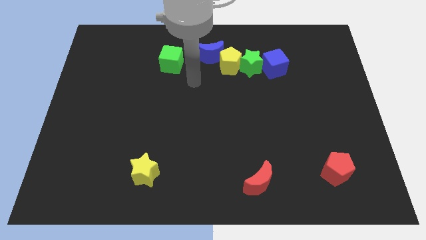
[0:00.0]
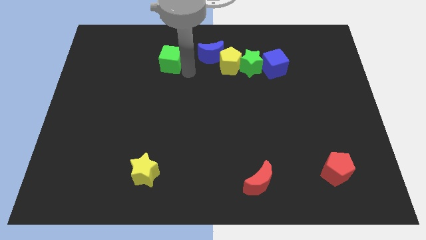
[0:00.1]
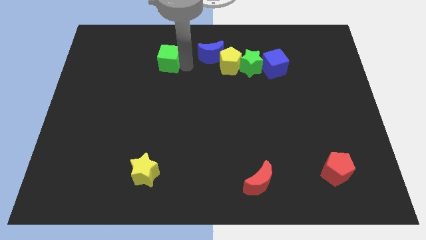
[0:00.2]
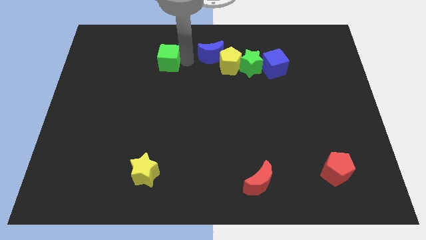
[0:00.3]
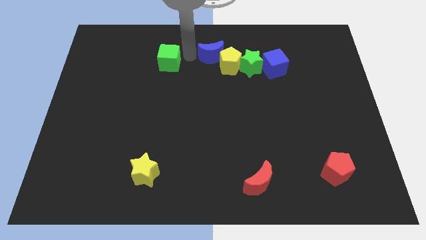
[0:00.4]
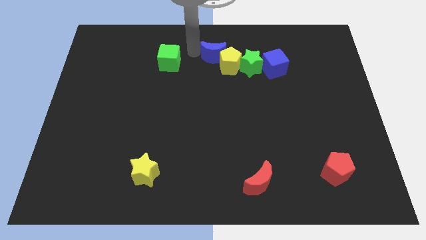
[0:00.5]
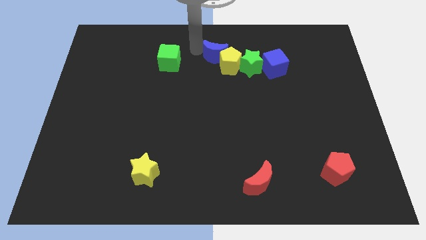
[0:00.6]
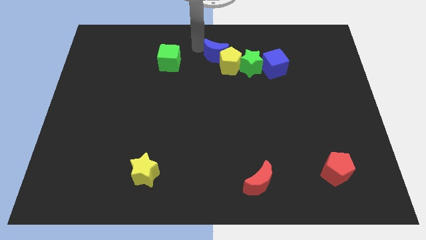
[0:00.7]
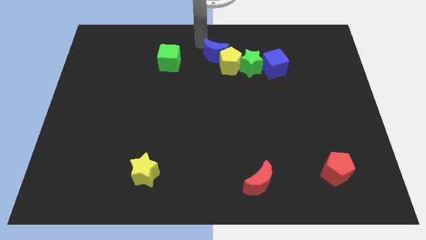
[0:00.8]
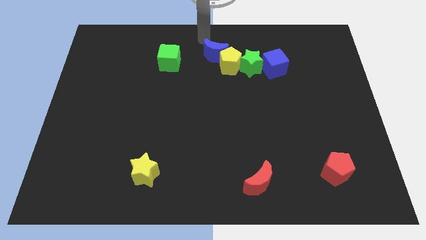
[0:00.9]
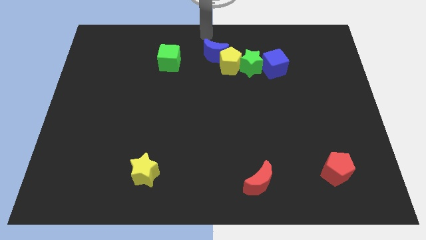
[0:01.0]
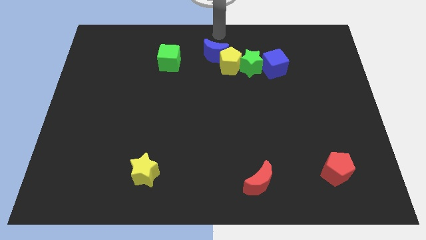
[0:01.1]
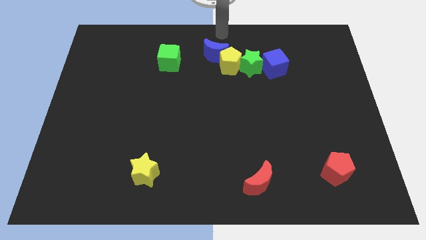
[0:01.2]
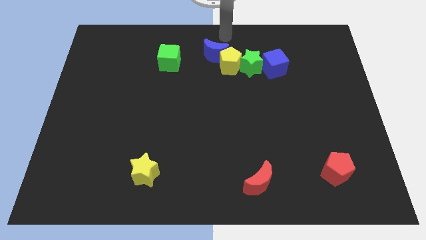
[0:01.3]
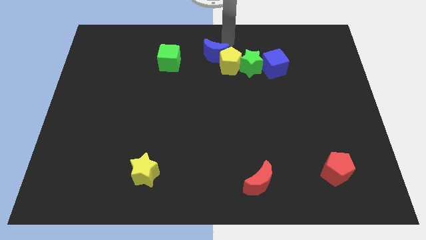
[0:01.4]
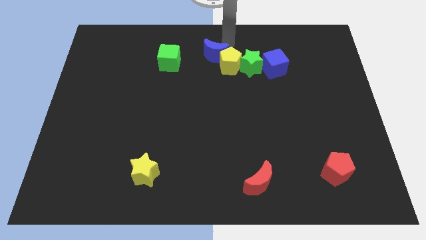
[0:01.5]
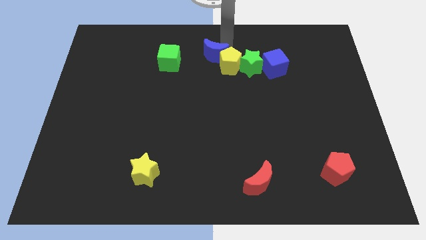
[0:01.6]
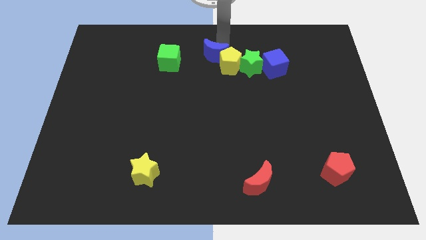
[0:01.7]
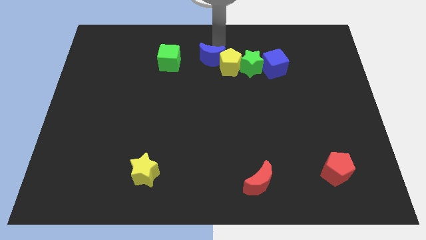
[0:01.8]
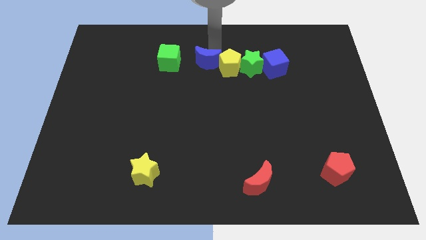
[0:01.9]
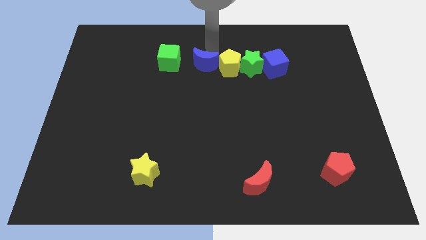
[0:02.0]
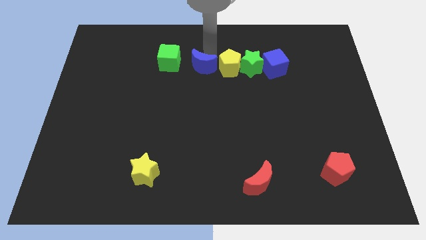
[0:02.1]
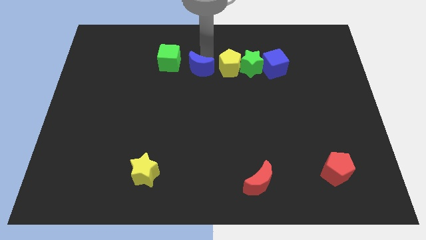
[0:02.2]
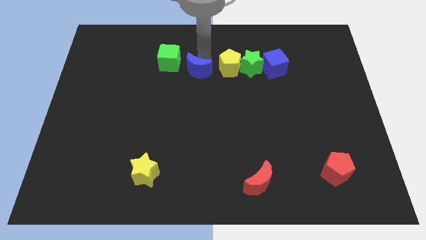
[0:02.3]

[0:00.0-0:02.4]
place the blue crescent in between the green cube and yellow pentagon

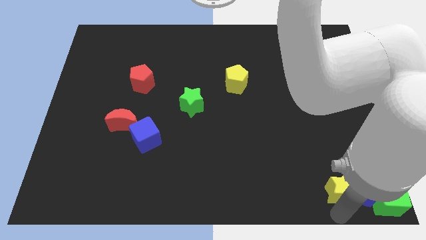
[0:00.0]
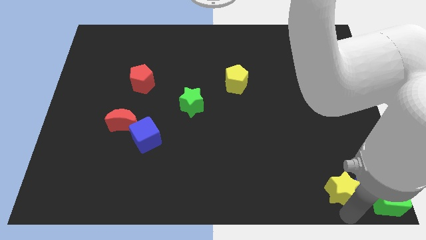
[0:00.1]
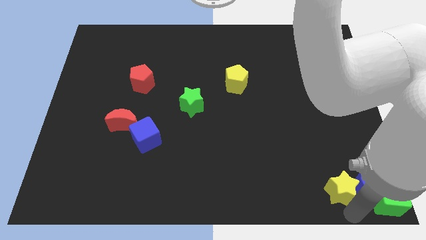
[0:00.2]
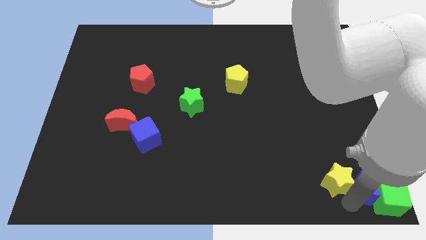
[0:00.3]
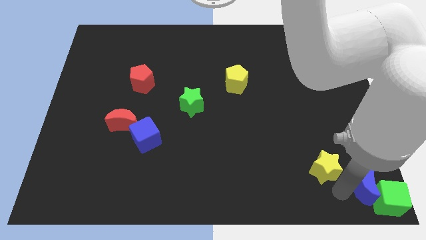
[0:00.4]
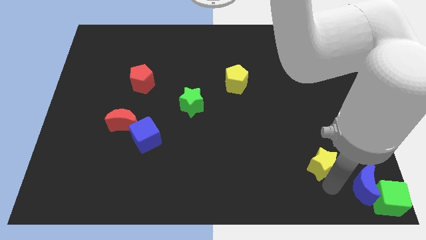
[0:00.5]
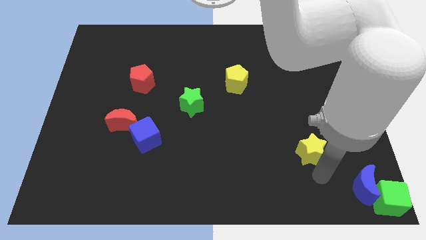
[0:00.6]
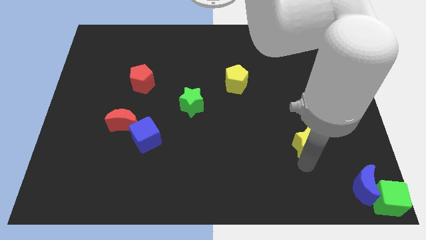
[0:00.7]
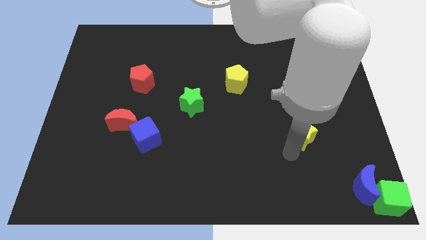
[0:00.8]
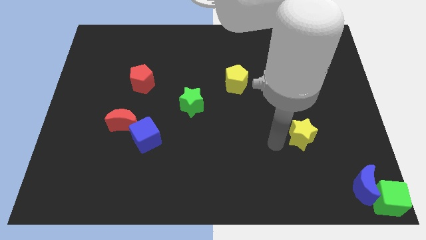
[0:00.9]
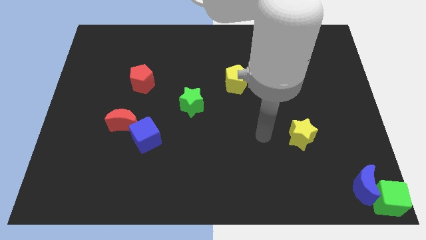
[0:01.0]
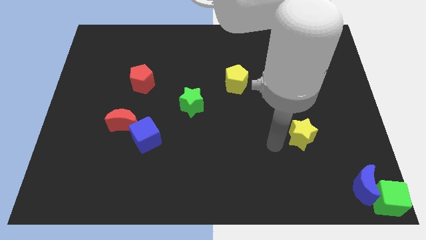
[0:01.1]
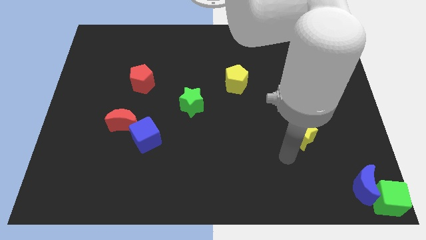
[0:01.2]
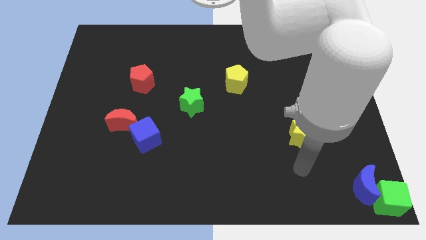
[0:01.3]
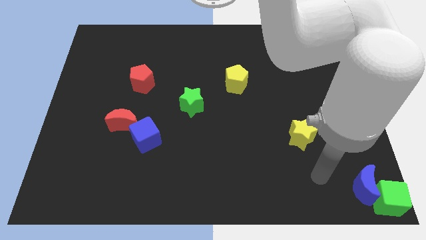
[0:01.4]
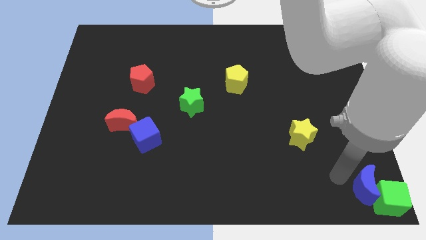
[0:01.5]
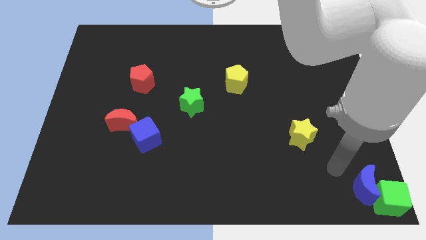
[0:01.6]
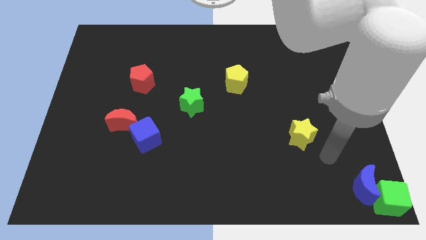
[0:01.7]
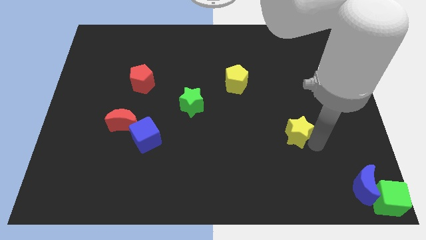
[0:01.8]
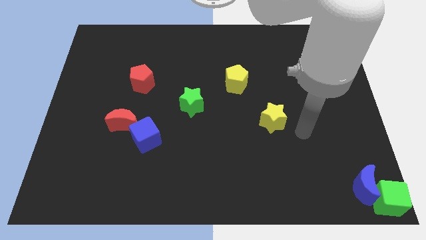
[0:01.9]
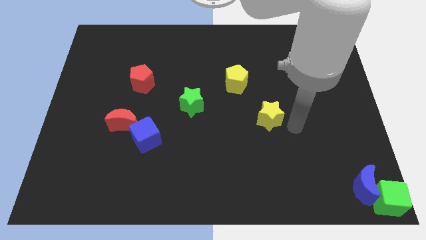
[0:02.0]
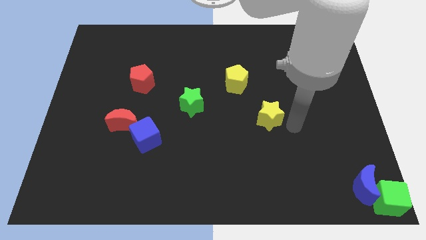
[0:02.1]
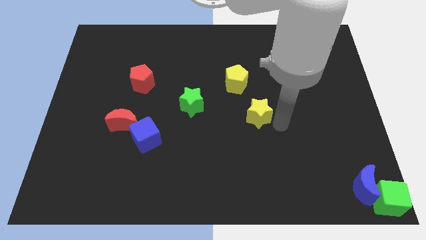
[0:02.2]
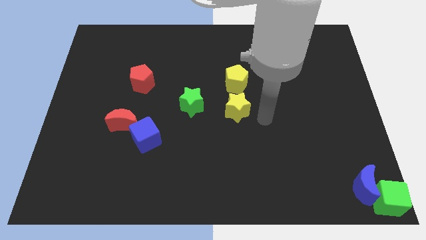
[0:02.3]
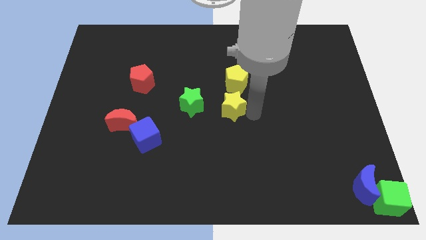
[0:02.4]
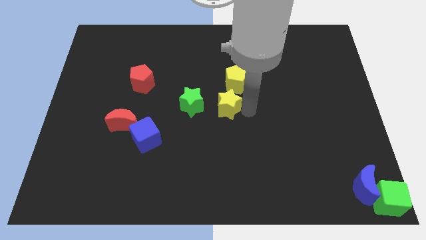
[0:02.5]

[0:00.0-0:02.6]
push the yellow star to the center of the board

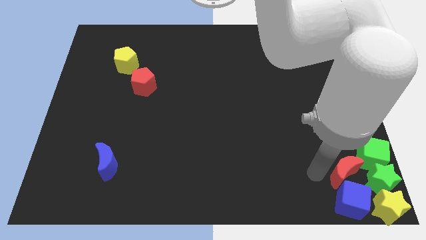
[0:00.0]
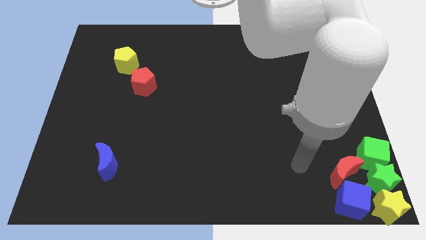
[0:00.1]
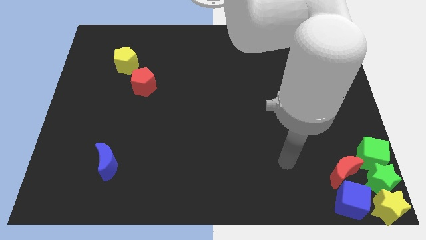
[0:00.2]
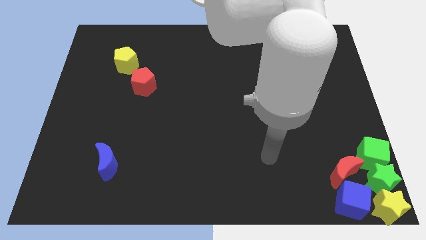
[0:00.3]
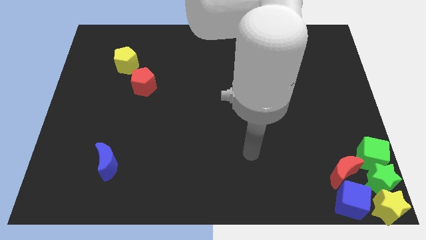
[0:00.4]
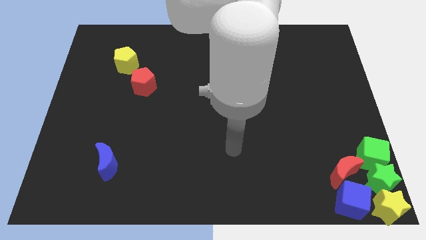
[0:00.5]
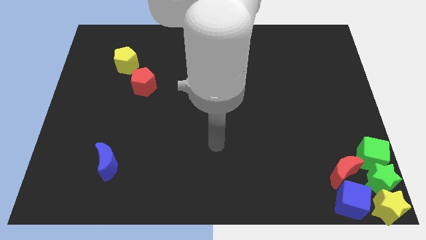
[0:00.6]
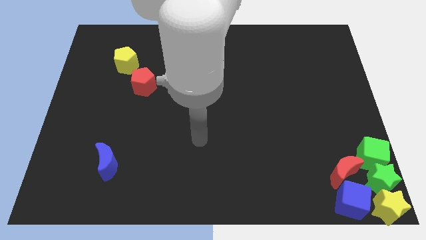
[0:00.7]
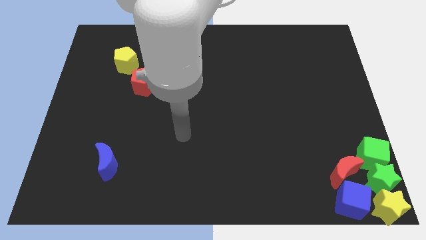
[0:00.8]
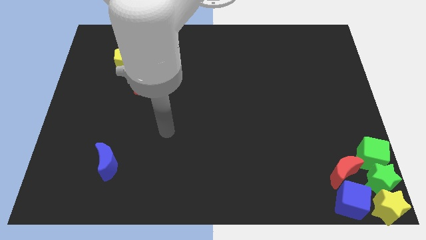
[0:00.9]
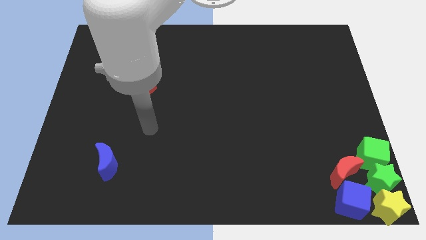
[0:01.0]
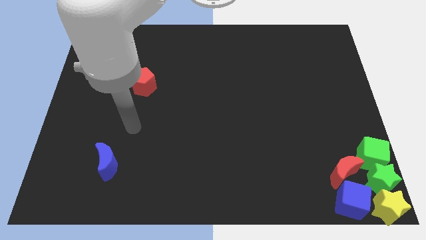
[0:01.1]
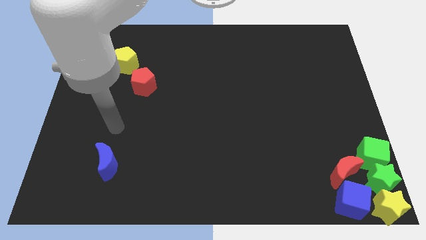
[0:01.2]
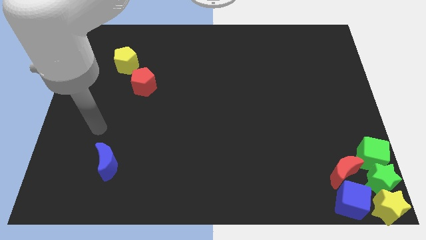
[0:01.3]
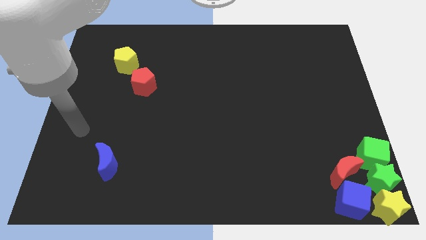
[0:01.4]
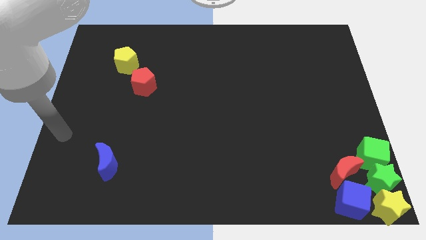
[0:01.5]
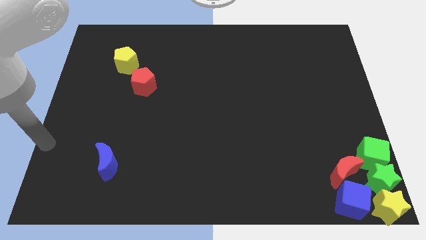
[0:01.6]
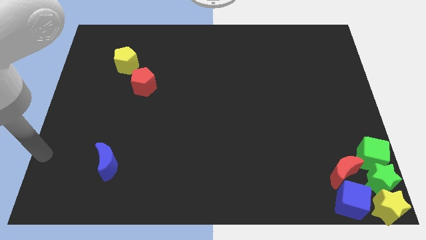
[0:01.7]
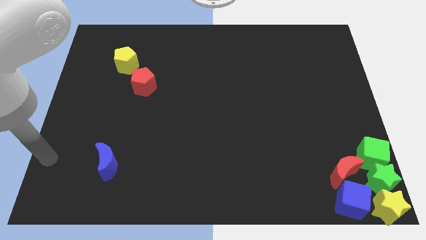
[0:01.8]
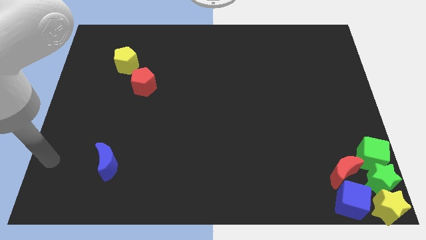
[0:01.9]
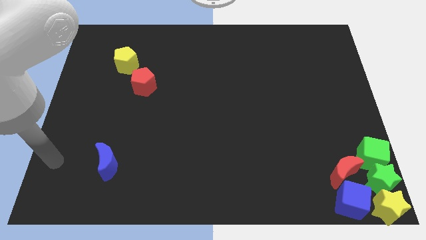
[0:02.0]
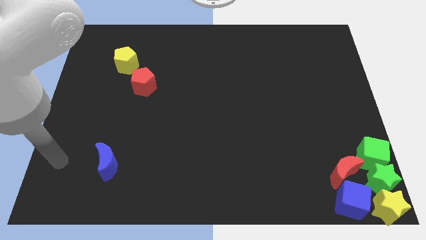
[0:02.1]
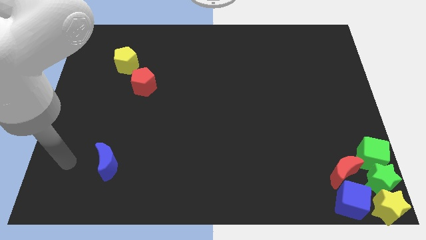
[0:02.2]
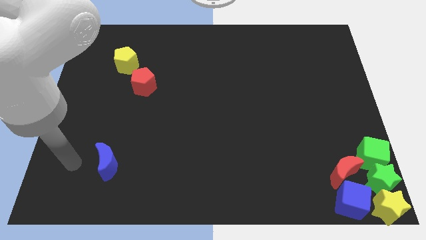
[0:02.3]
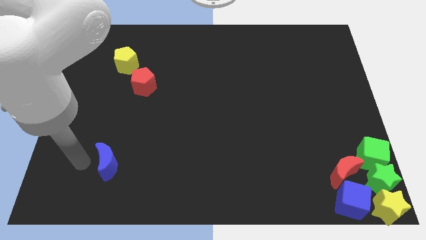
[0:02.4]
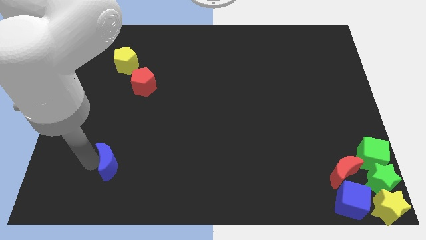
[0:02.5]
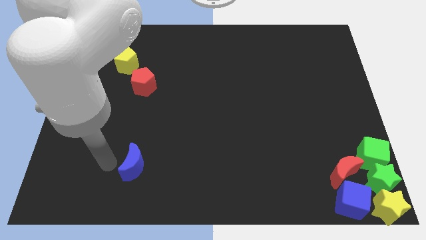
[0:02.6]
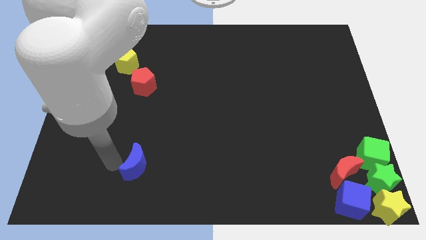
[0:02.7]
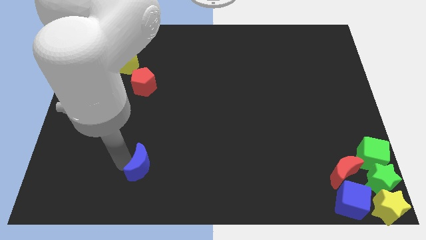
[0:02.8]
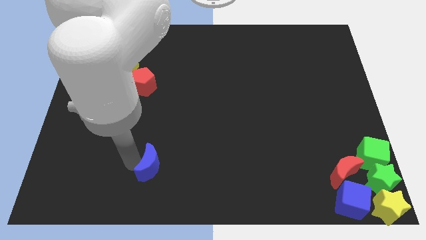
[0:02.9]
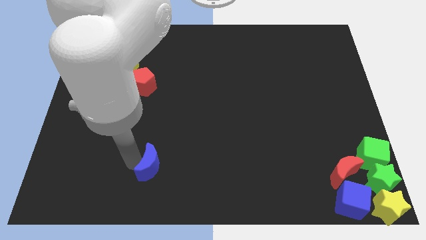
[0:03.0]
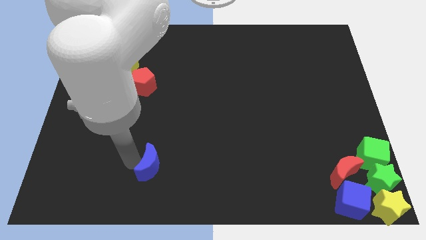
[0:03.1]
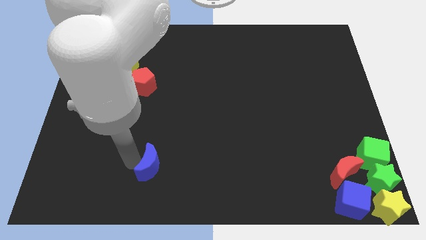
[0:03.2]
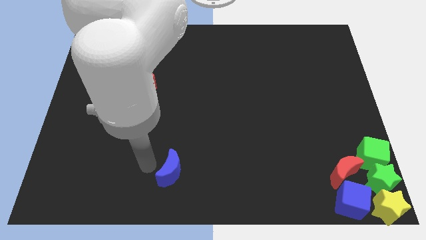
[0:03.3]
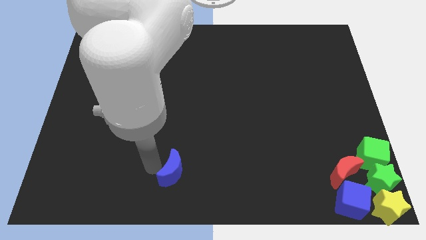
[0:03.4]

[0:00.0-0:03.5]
move the blue crescent slightly to the bottom center of the board

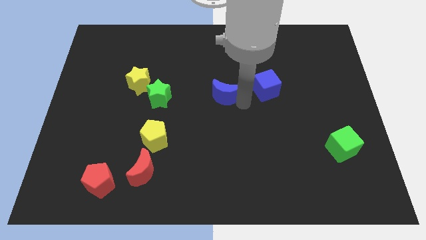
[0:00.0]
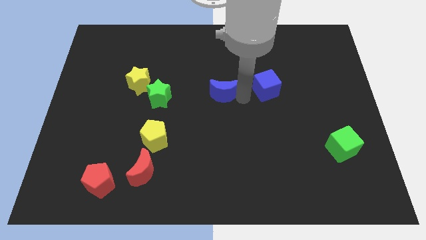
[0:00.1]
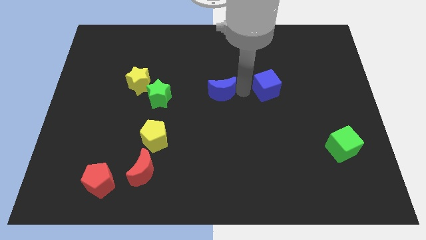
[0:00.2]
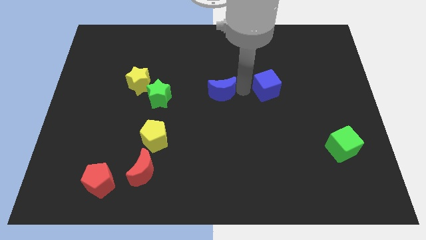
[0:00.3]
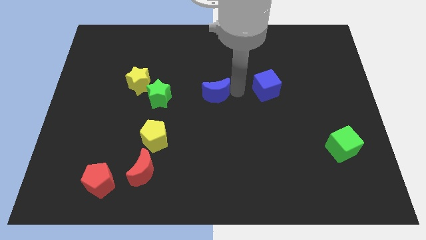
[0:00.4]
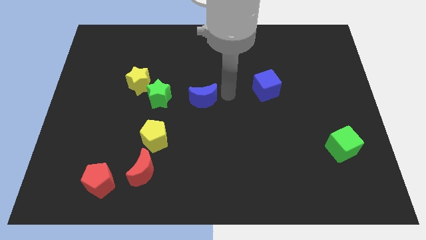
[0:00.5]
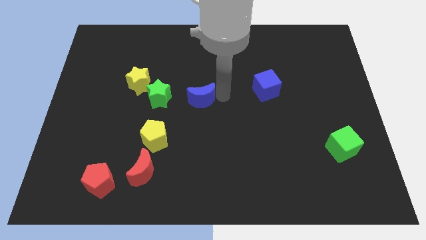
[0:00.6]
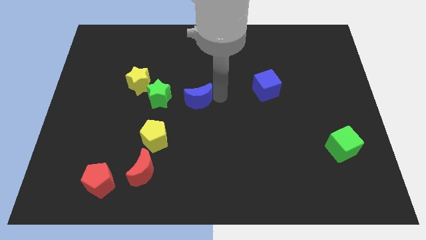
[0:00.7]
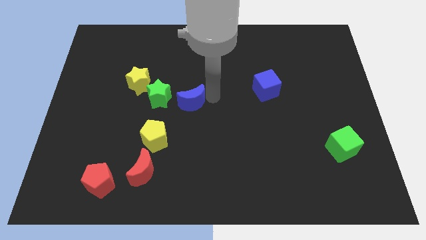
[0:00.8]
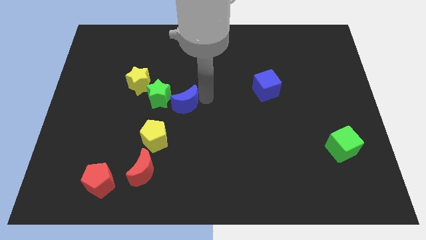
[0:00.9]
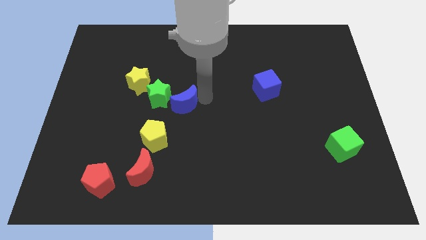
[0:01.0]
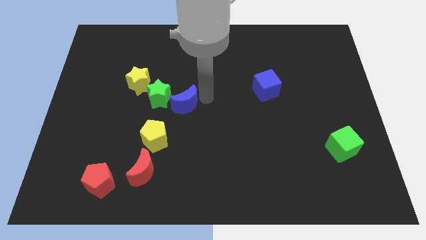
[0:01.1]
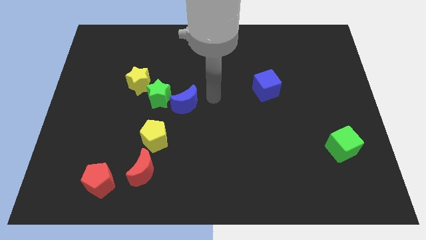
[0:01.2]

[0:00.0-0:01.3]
move blue moon next to green star
